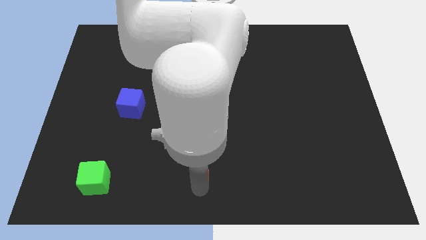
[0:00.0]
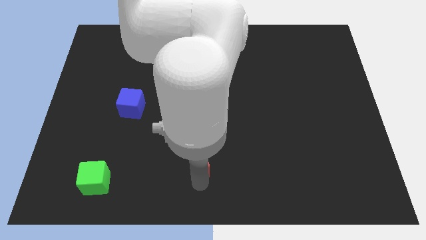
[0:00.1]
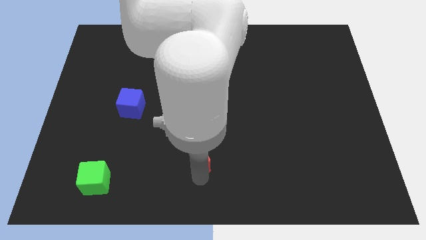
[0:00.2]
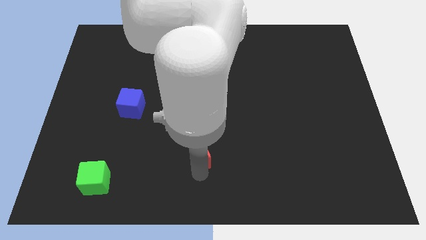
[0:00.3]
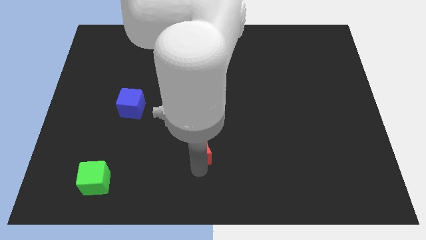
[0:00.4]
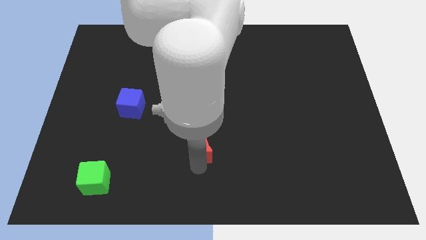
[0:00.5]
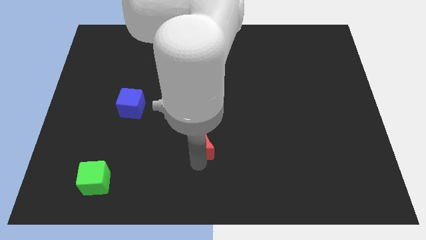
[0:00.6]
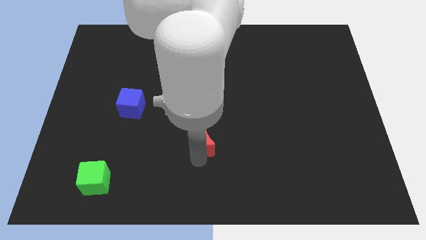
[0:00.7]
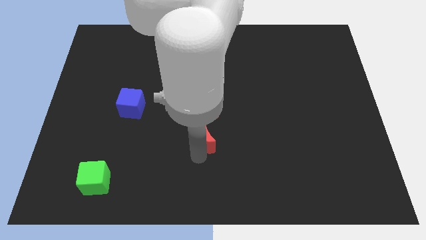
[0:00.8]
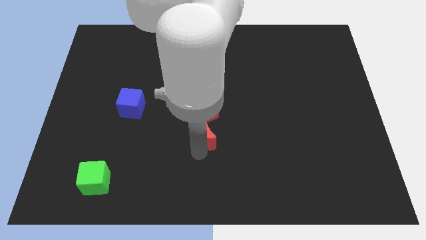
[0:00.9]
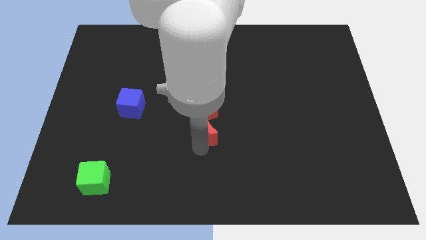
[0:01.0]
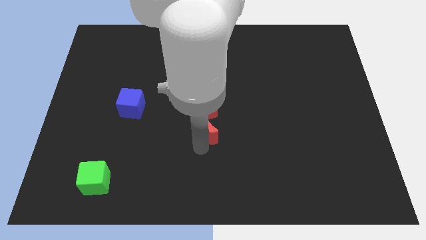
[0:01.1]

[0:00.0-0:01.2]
move the red crescent to the bottom of red pentagon

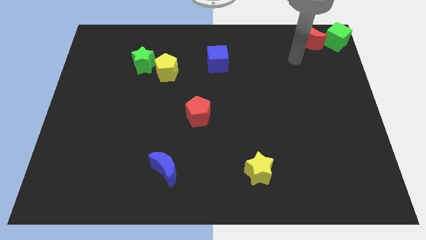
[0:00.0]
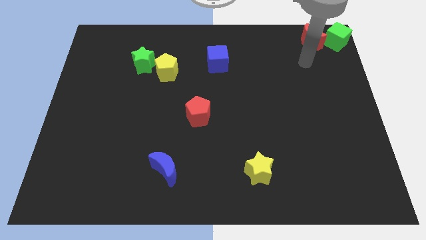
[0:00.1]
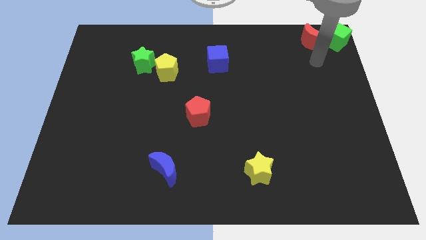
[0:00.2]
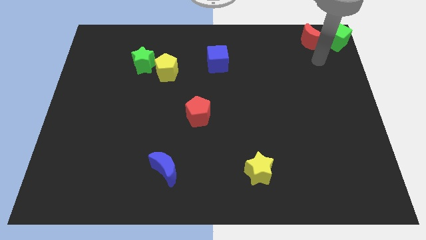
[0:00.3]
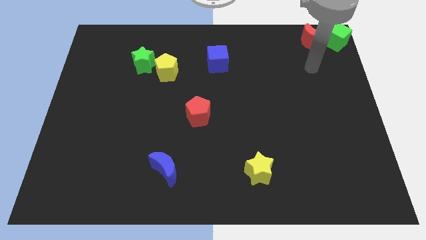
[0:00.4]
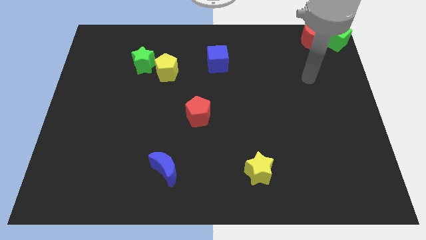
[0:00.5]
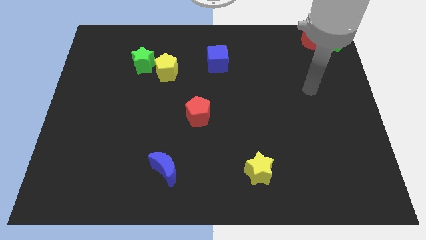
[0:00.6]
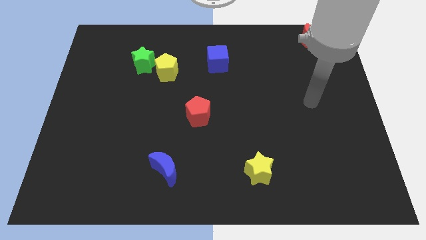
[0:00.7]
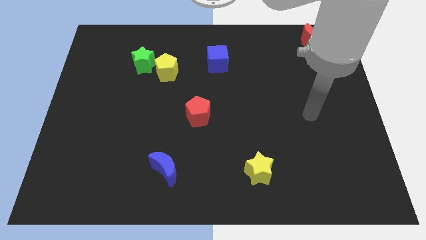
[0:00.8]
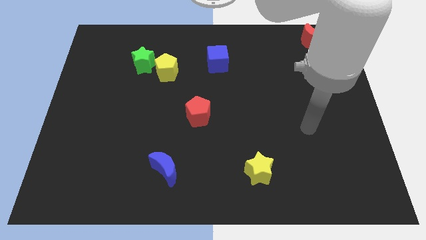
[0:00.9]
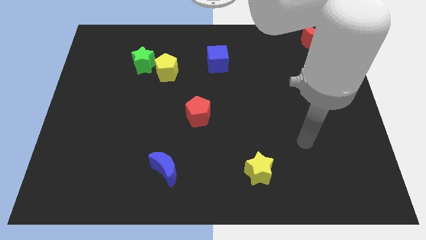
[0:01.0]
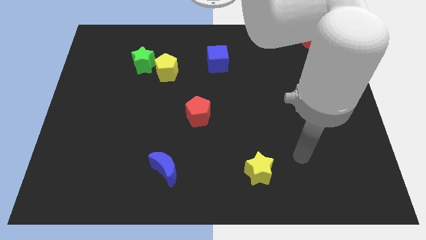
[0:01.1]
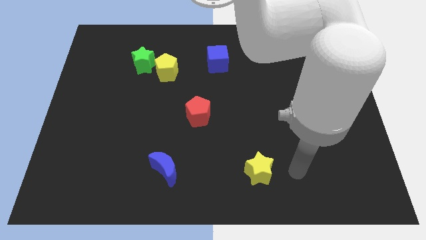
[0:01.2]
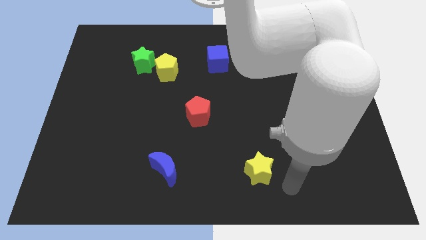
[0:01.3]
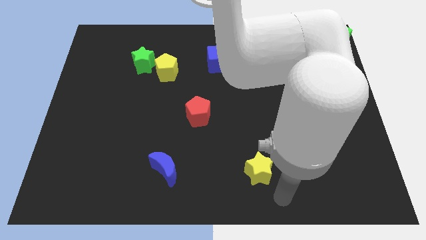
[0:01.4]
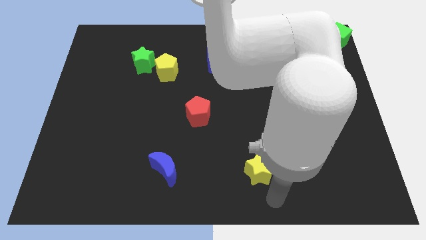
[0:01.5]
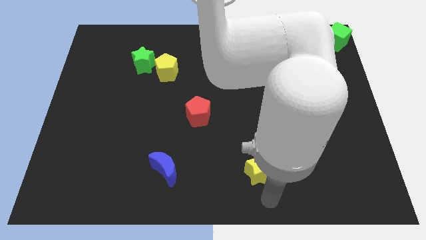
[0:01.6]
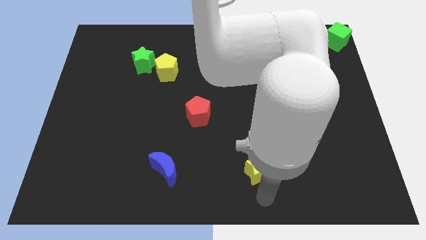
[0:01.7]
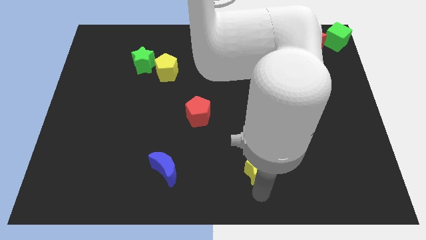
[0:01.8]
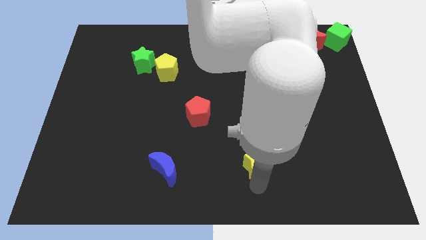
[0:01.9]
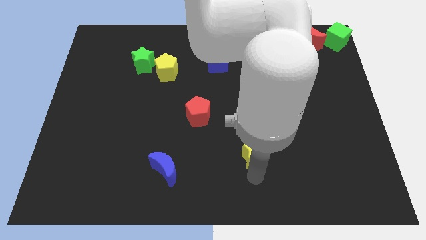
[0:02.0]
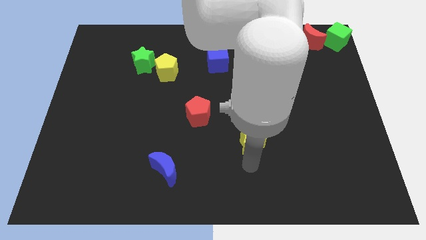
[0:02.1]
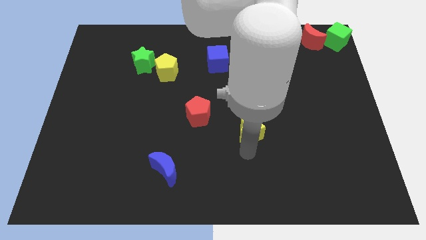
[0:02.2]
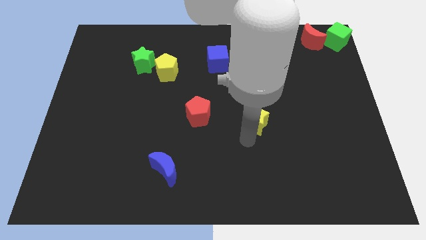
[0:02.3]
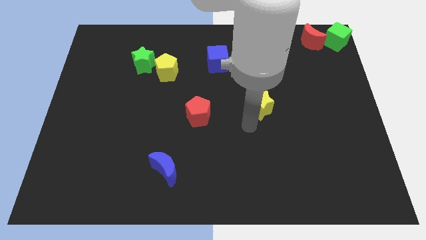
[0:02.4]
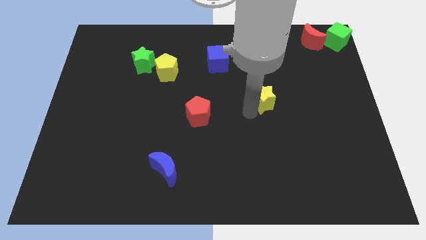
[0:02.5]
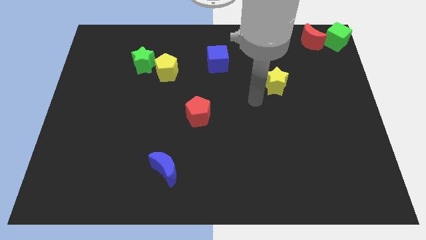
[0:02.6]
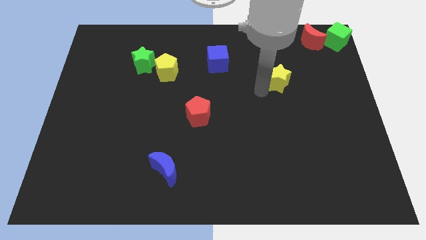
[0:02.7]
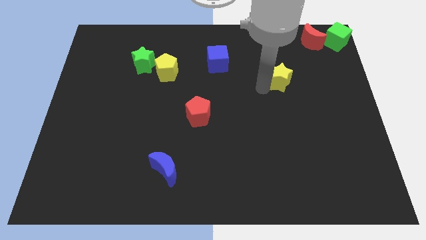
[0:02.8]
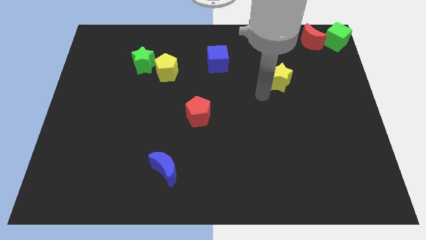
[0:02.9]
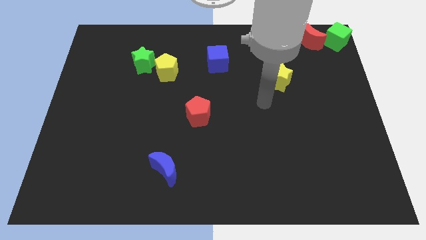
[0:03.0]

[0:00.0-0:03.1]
drag the yellow star towards the top of the board

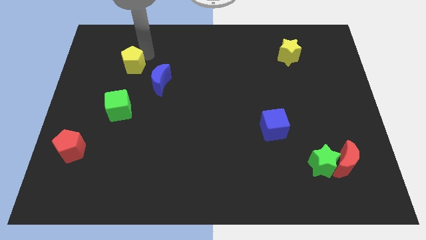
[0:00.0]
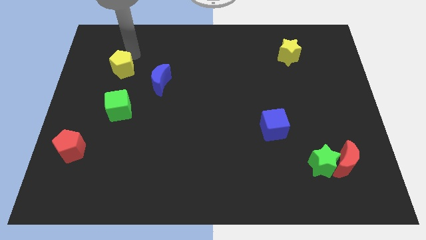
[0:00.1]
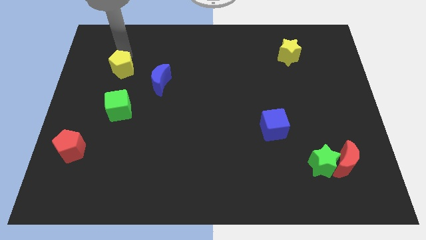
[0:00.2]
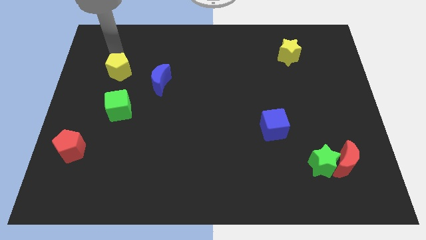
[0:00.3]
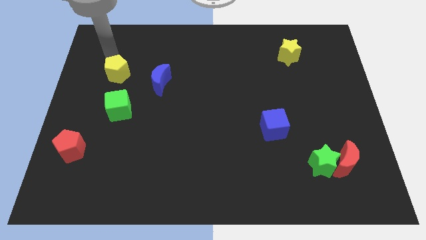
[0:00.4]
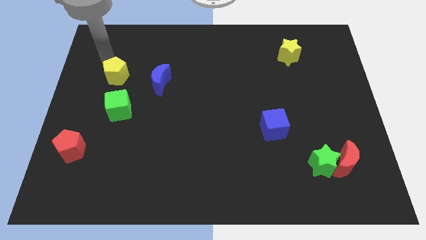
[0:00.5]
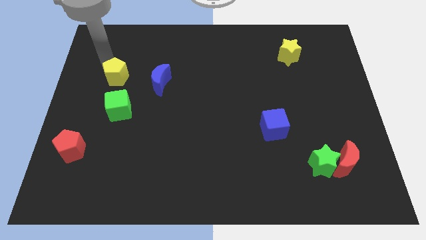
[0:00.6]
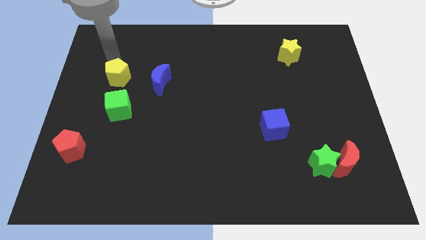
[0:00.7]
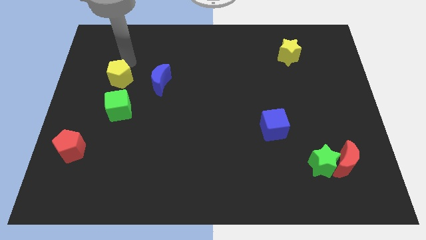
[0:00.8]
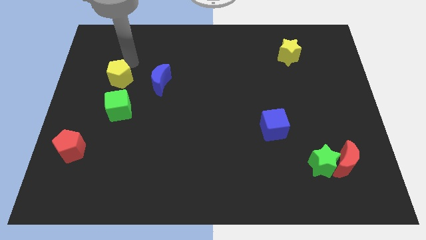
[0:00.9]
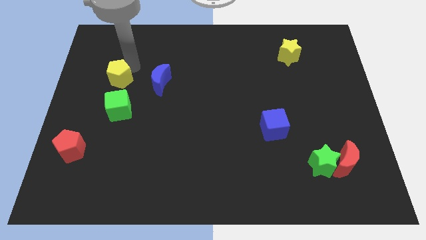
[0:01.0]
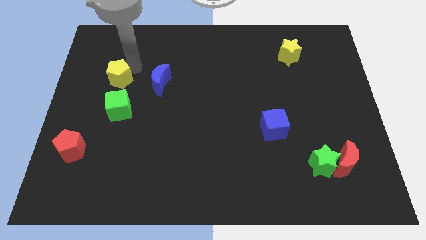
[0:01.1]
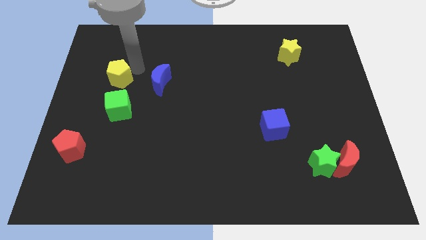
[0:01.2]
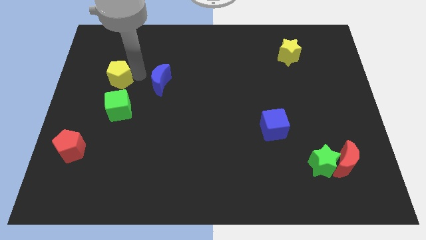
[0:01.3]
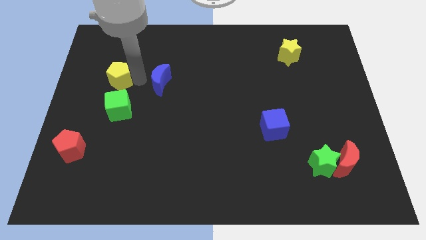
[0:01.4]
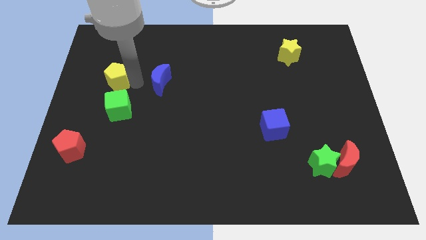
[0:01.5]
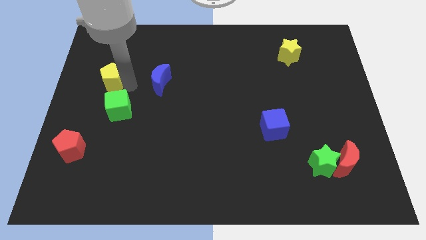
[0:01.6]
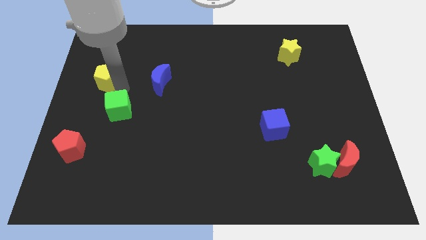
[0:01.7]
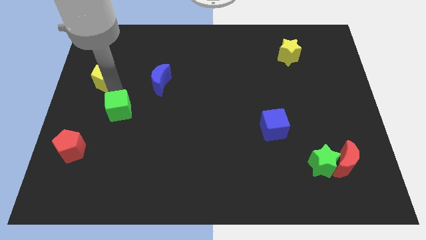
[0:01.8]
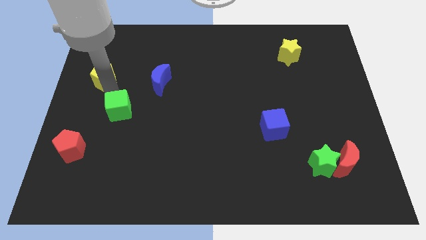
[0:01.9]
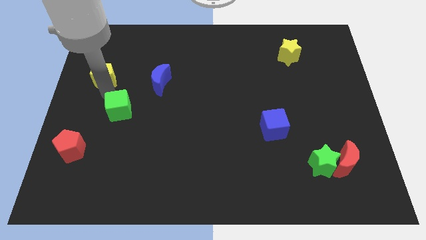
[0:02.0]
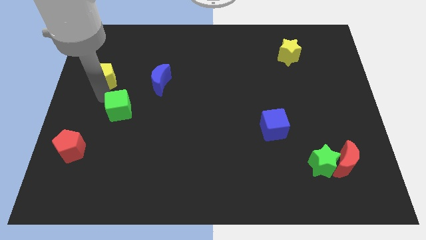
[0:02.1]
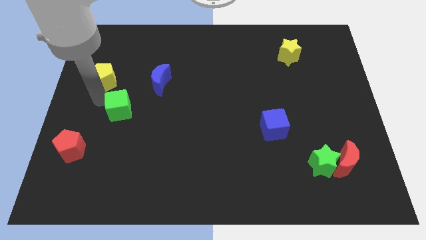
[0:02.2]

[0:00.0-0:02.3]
place yellow pentagon parallel to blue moon

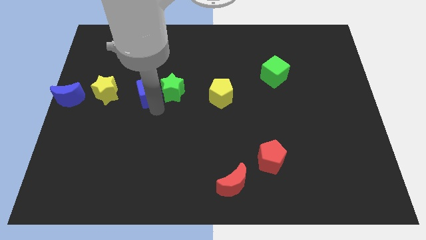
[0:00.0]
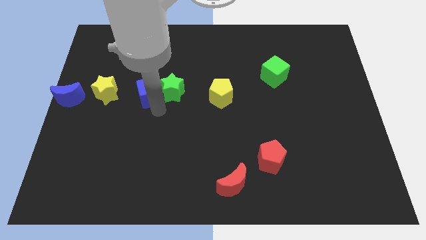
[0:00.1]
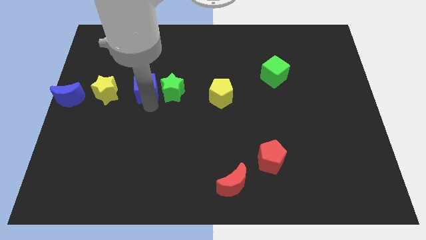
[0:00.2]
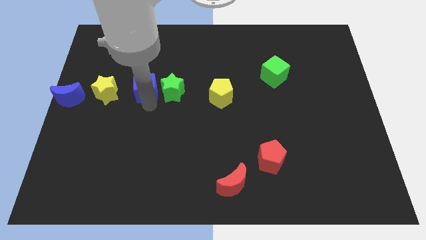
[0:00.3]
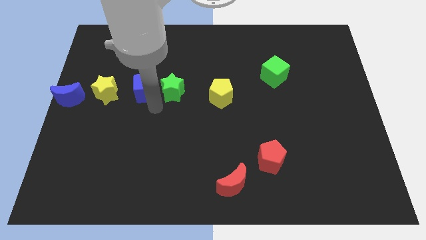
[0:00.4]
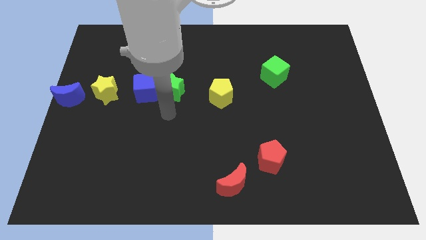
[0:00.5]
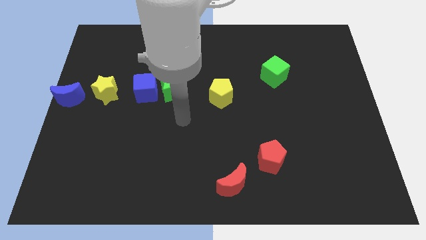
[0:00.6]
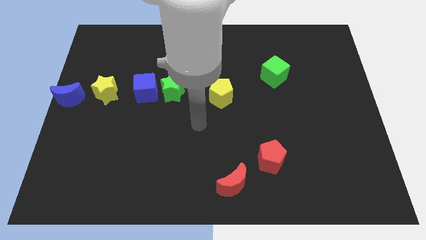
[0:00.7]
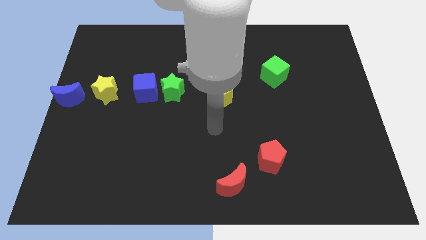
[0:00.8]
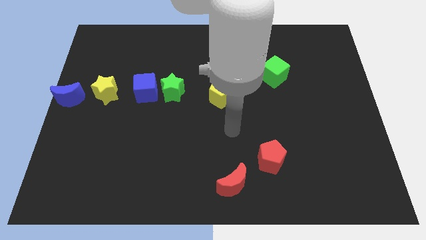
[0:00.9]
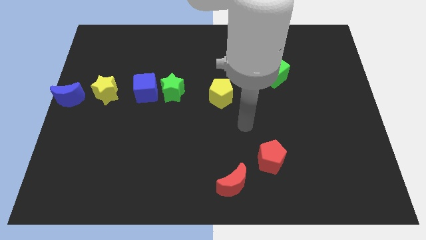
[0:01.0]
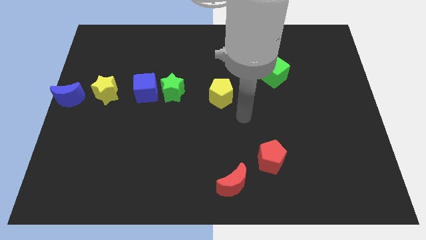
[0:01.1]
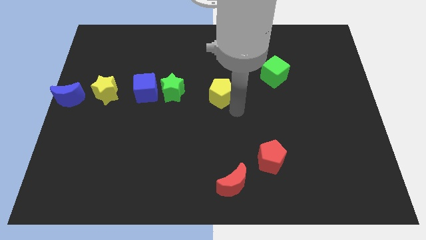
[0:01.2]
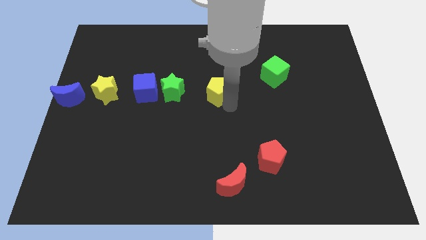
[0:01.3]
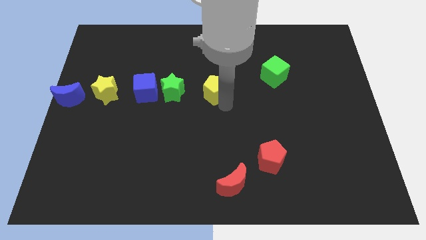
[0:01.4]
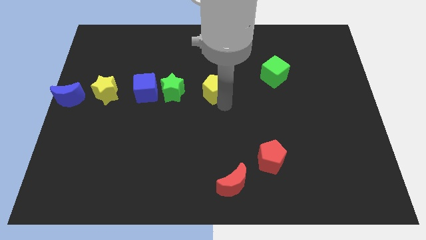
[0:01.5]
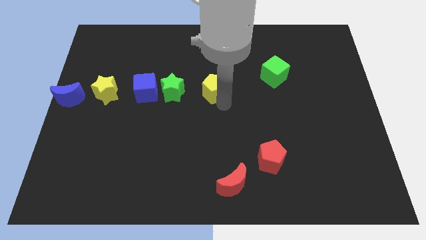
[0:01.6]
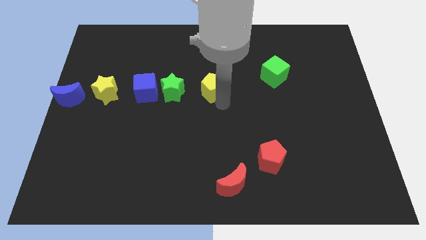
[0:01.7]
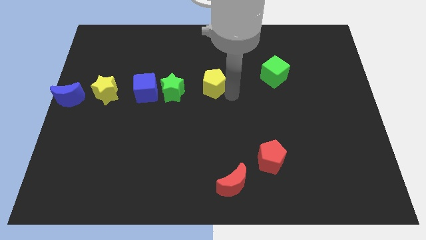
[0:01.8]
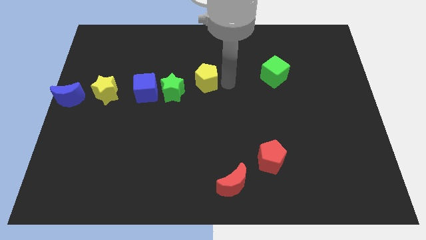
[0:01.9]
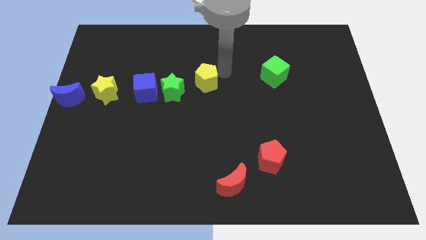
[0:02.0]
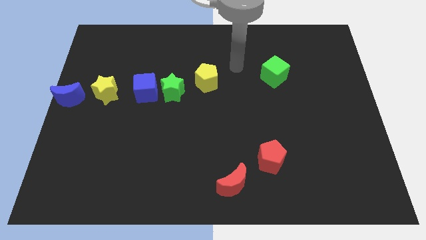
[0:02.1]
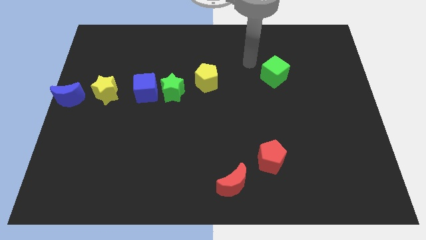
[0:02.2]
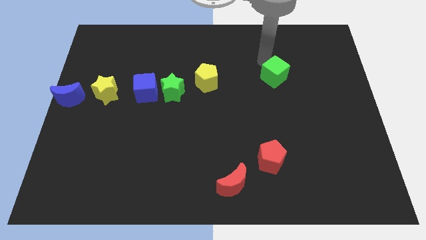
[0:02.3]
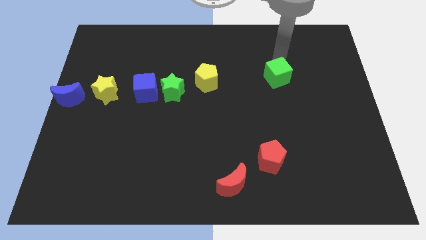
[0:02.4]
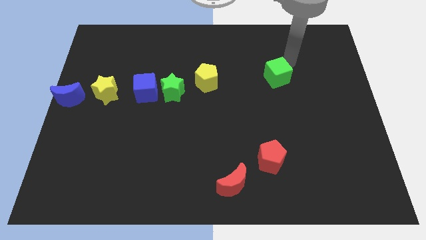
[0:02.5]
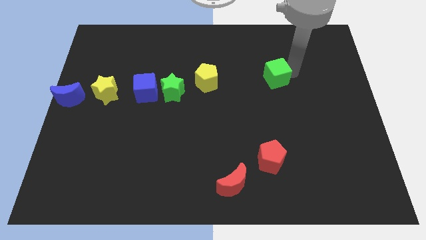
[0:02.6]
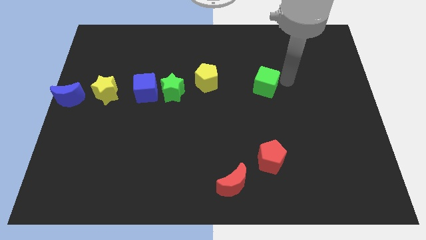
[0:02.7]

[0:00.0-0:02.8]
touch the green cube
